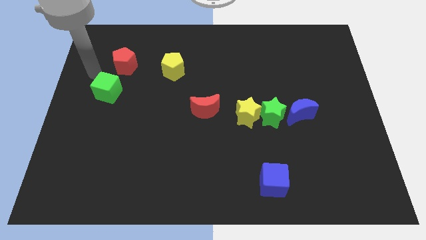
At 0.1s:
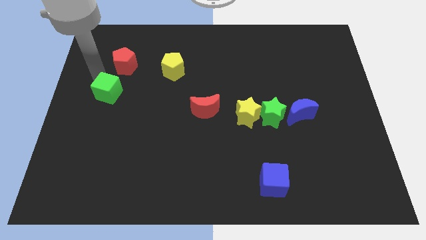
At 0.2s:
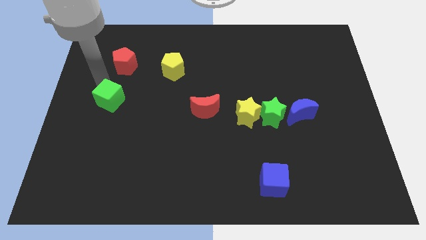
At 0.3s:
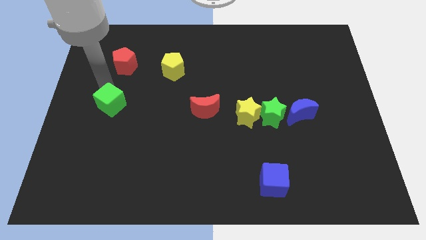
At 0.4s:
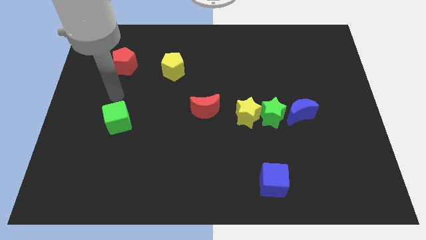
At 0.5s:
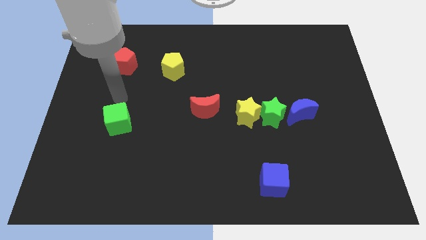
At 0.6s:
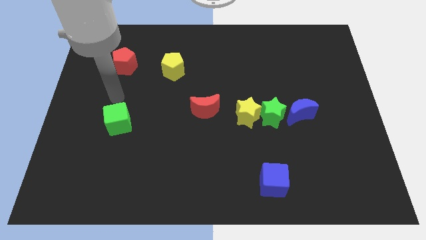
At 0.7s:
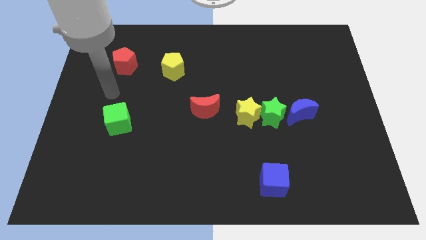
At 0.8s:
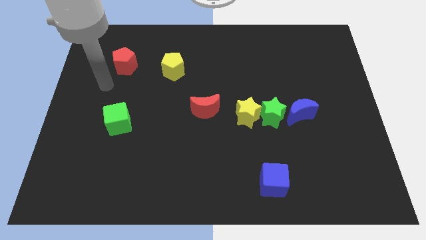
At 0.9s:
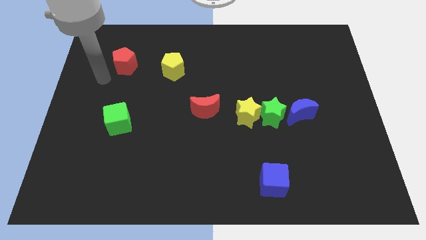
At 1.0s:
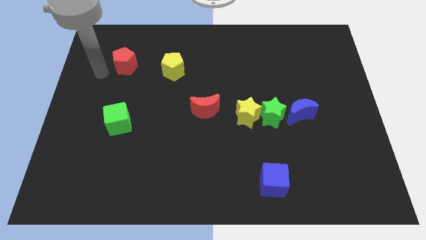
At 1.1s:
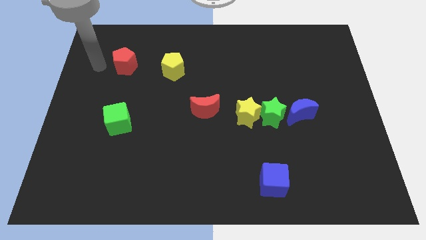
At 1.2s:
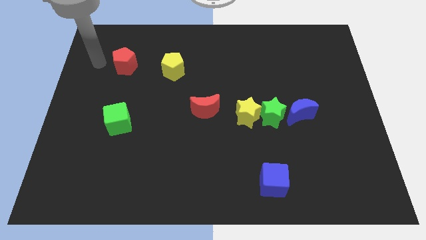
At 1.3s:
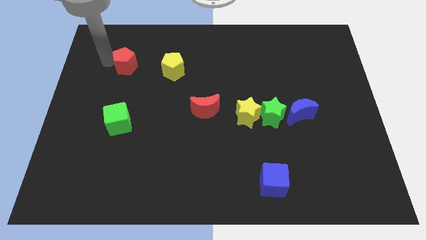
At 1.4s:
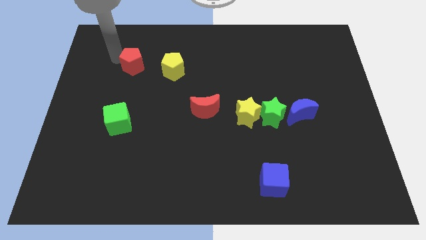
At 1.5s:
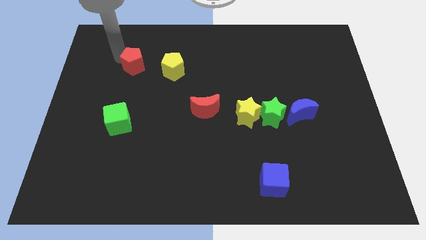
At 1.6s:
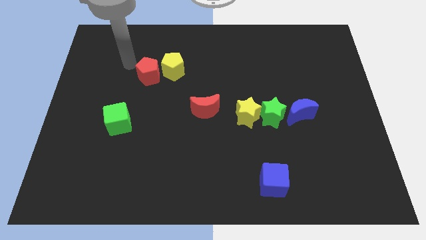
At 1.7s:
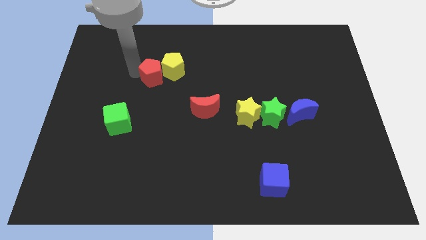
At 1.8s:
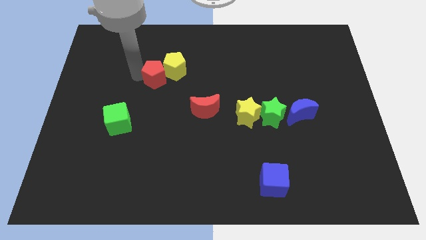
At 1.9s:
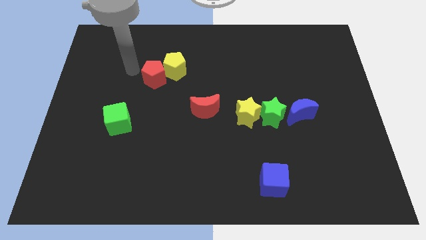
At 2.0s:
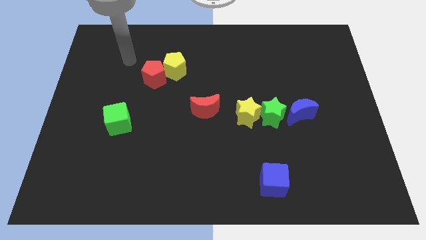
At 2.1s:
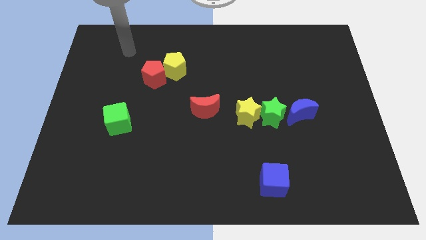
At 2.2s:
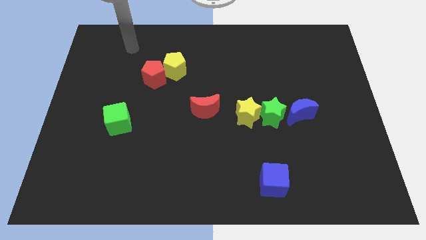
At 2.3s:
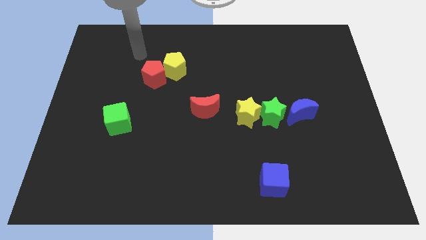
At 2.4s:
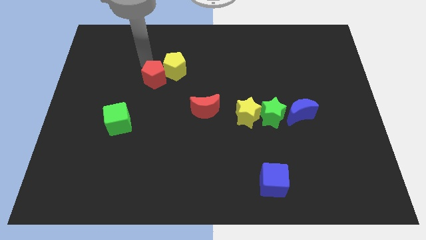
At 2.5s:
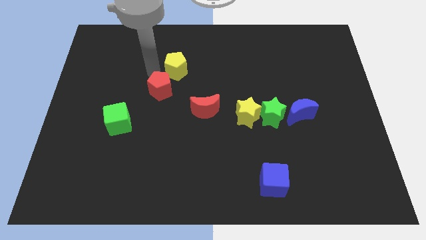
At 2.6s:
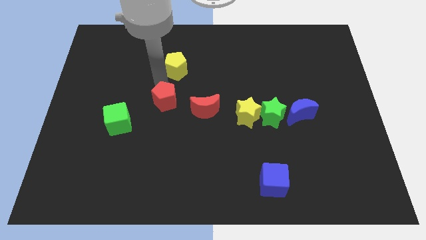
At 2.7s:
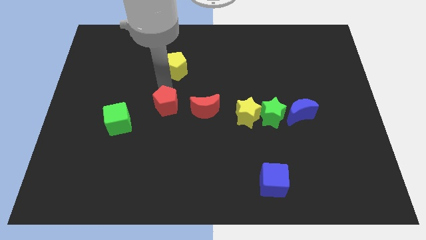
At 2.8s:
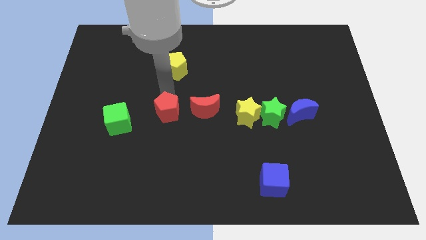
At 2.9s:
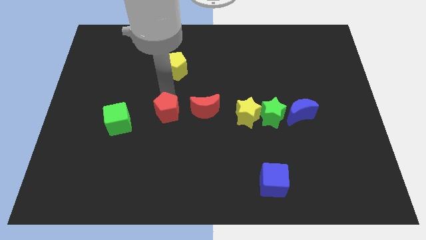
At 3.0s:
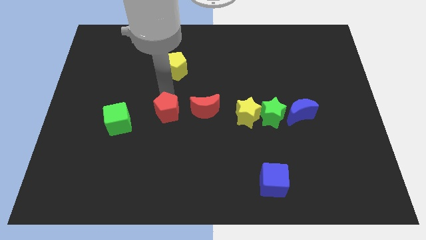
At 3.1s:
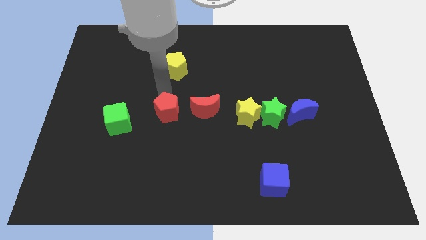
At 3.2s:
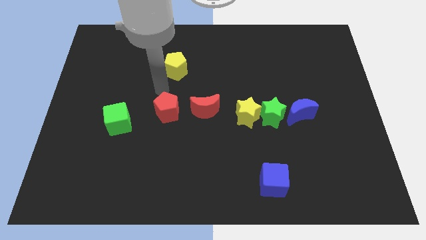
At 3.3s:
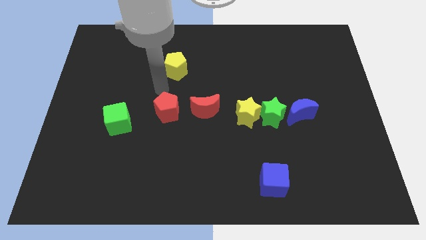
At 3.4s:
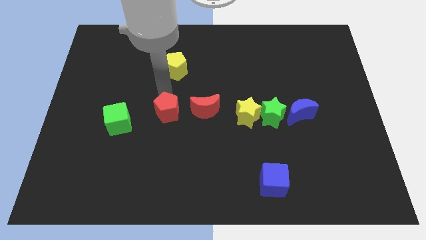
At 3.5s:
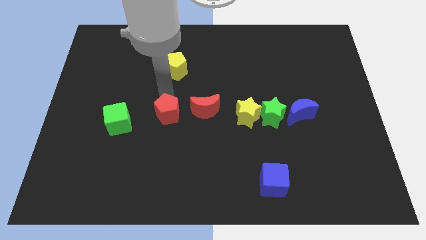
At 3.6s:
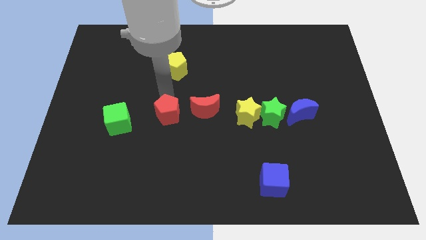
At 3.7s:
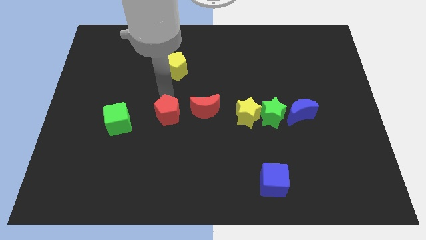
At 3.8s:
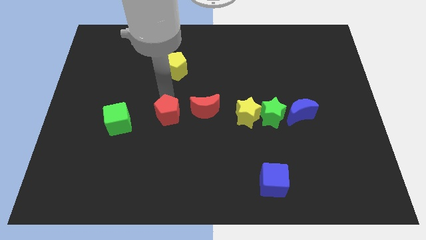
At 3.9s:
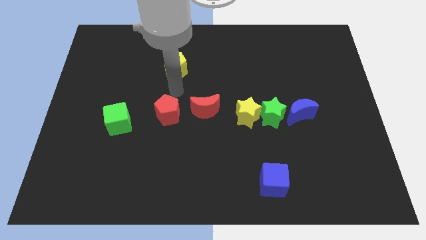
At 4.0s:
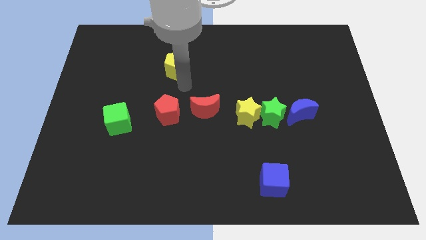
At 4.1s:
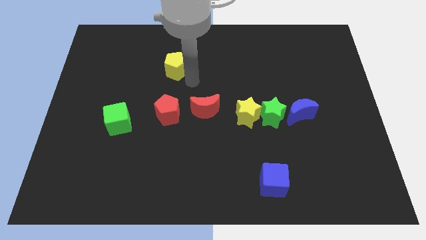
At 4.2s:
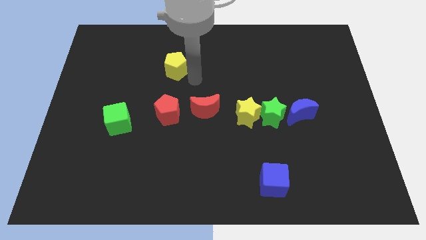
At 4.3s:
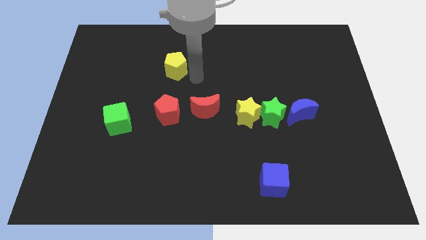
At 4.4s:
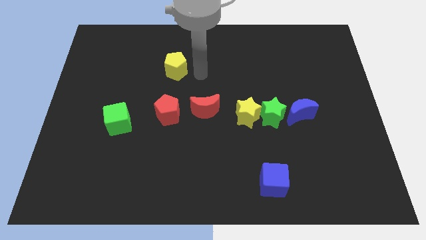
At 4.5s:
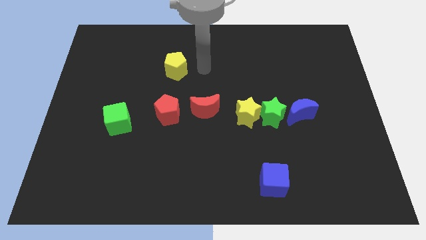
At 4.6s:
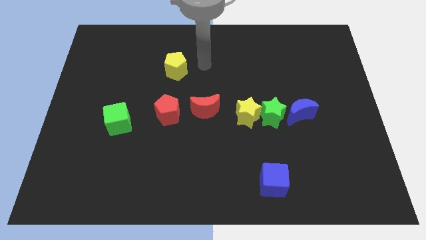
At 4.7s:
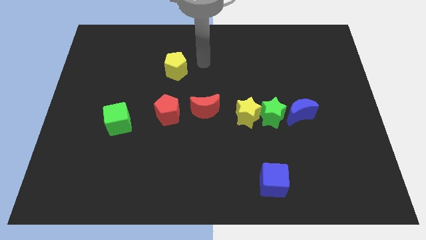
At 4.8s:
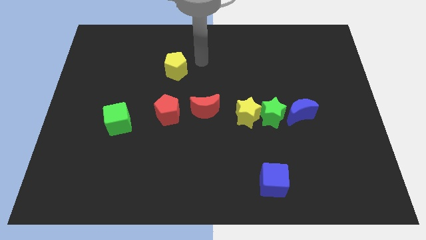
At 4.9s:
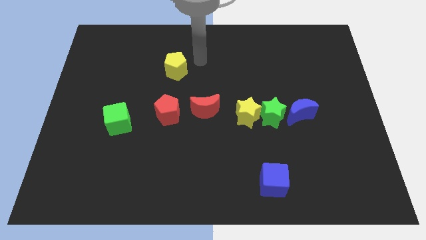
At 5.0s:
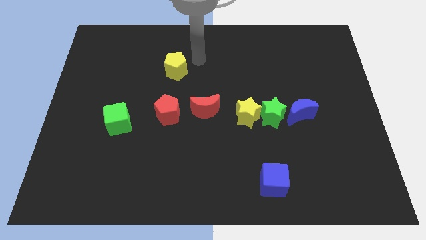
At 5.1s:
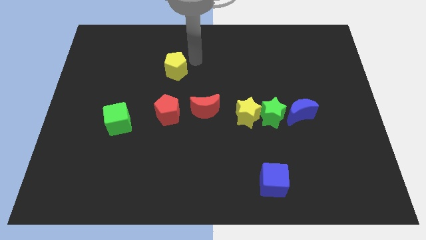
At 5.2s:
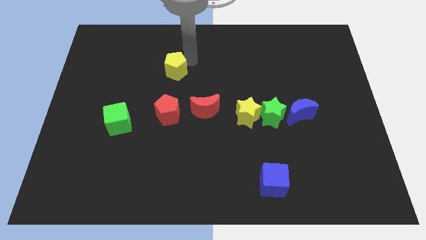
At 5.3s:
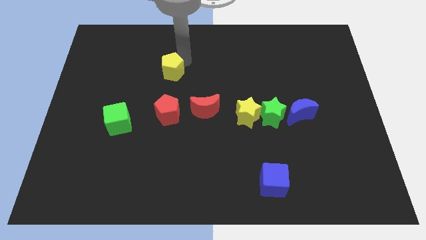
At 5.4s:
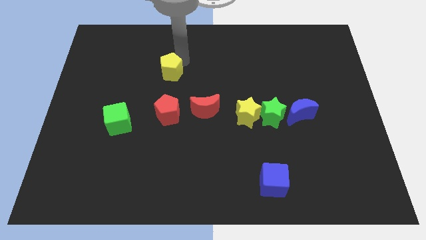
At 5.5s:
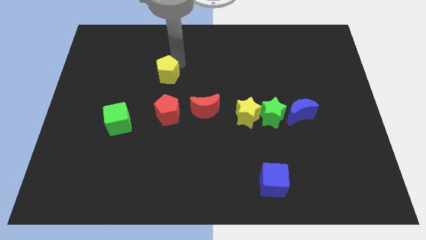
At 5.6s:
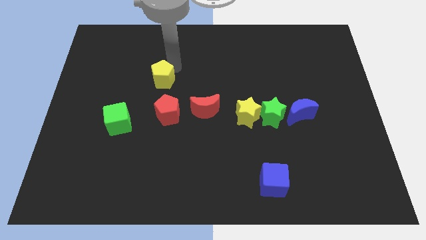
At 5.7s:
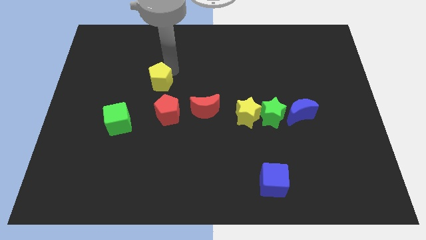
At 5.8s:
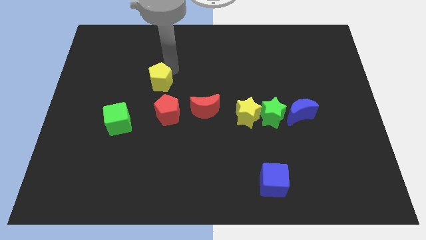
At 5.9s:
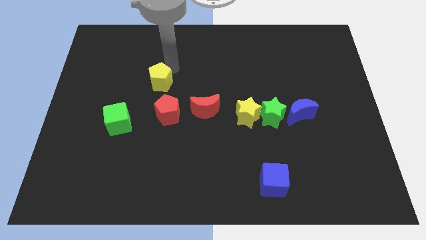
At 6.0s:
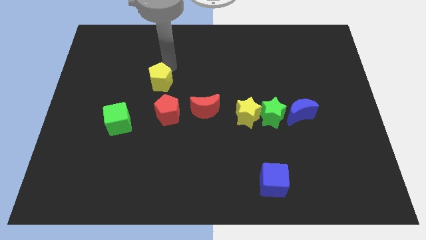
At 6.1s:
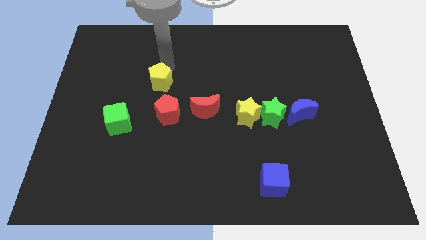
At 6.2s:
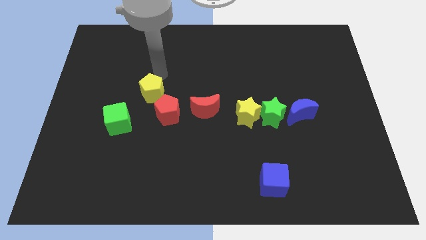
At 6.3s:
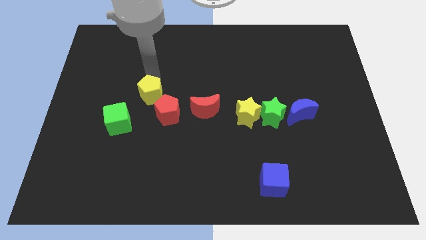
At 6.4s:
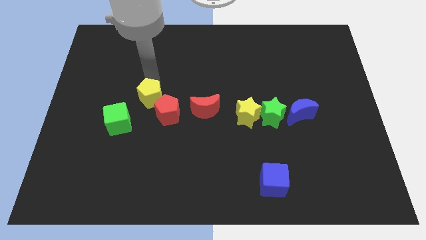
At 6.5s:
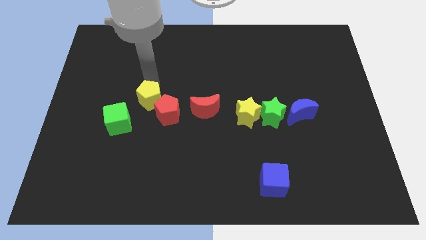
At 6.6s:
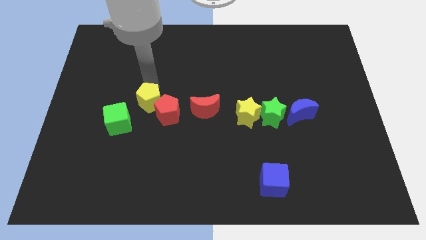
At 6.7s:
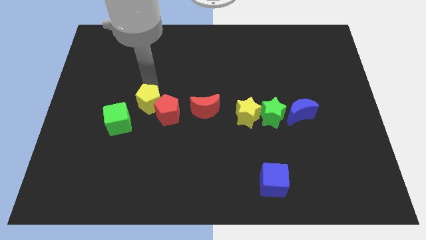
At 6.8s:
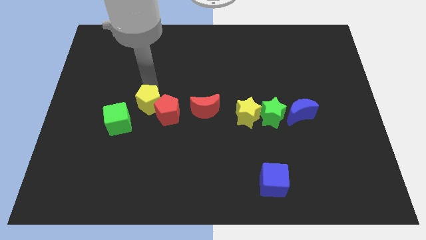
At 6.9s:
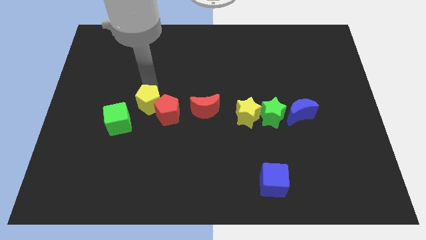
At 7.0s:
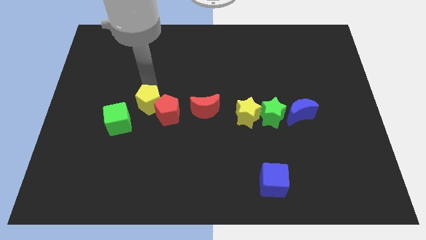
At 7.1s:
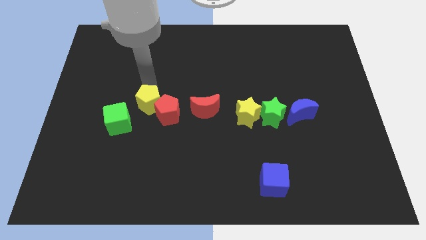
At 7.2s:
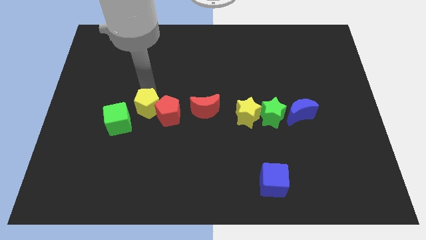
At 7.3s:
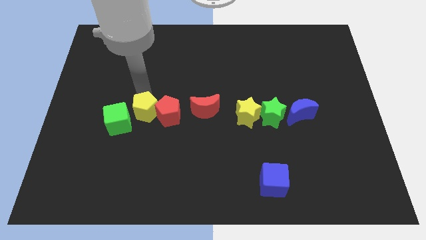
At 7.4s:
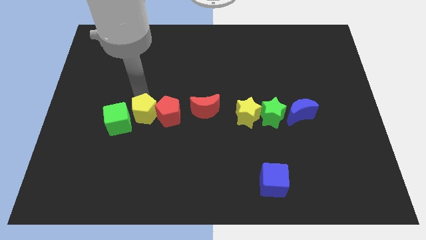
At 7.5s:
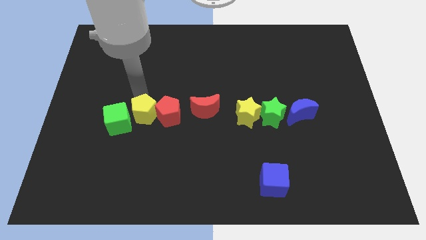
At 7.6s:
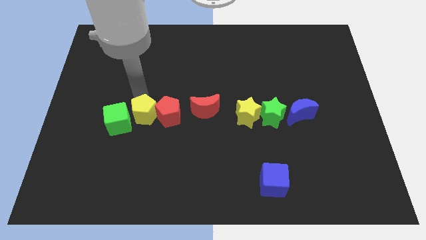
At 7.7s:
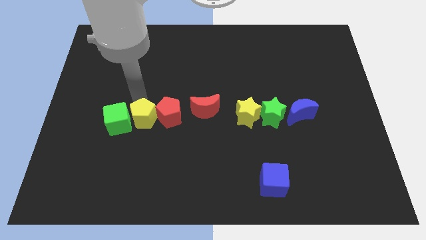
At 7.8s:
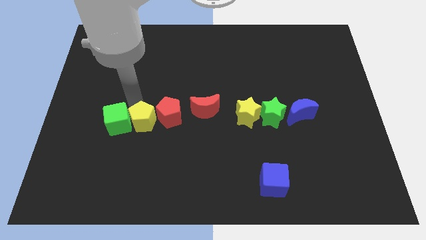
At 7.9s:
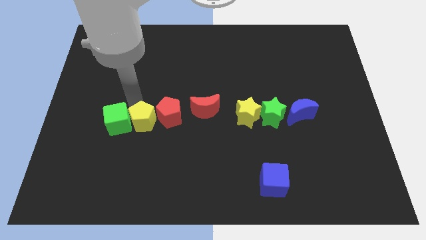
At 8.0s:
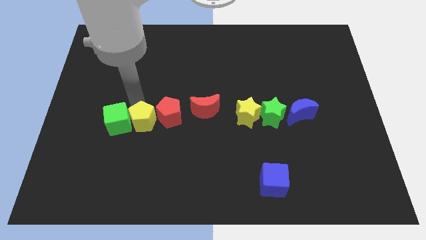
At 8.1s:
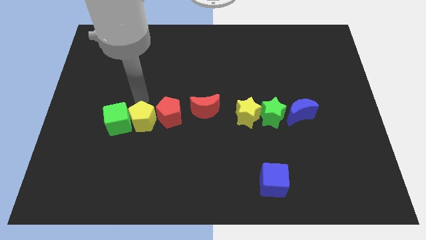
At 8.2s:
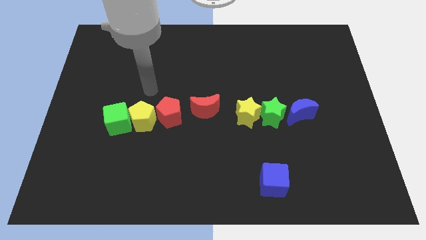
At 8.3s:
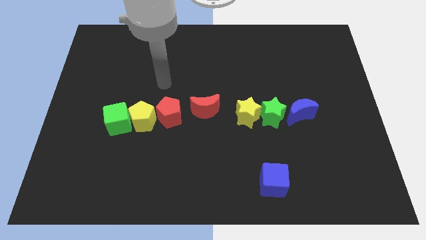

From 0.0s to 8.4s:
form a horizontal line with green cube red pentagon and yellow pentagon

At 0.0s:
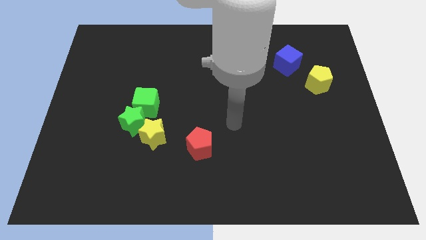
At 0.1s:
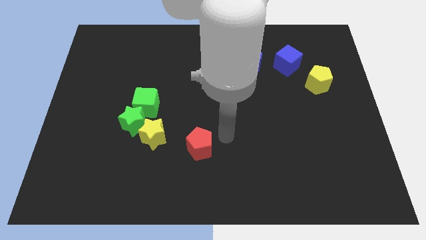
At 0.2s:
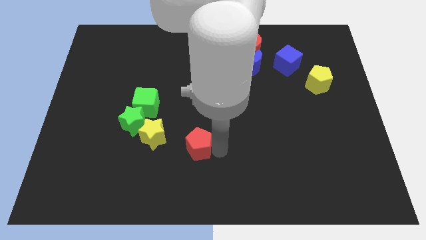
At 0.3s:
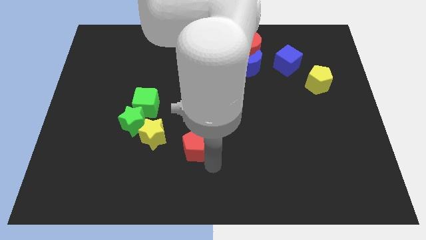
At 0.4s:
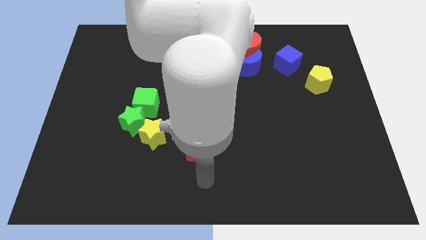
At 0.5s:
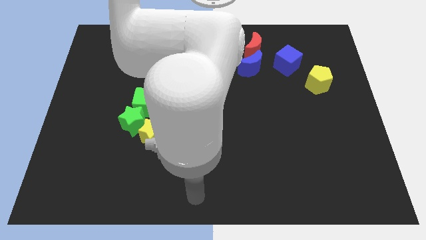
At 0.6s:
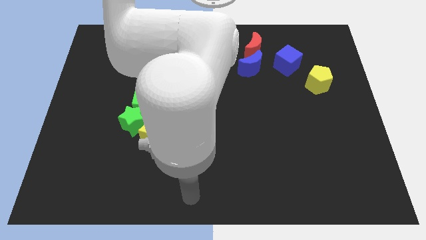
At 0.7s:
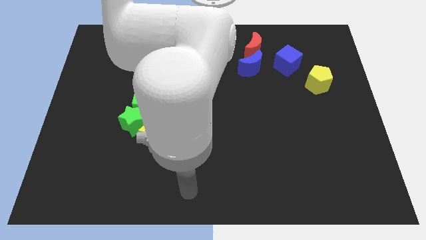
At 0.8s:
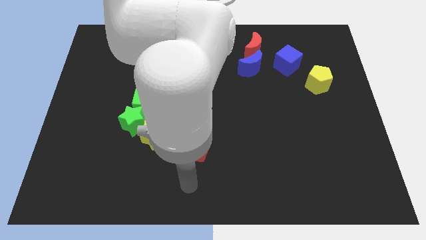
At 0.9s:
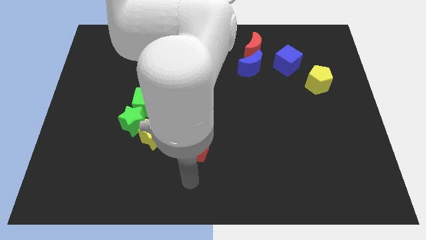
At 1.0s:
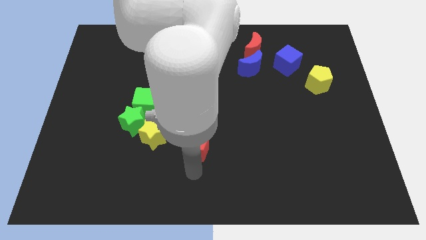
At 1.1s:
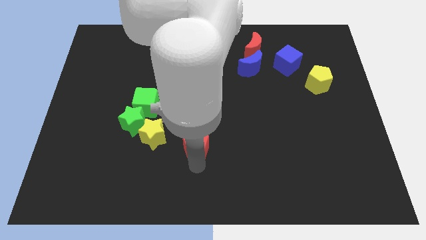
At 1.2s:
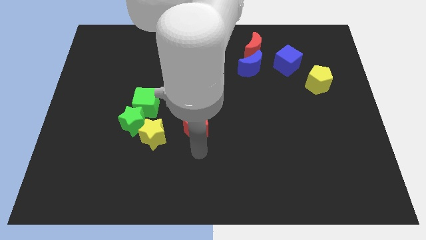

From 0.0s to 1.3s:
move red pentagon upwards
